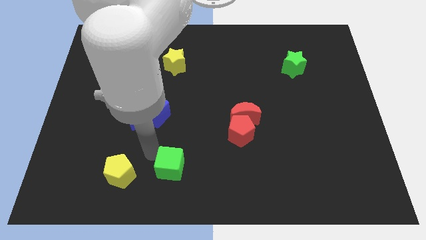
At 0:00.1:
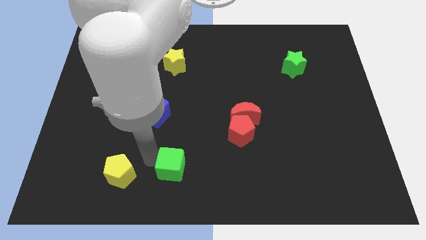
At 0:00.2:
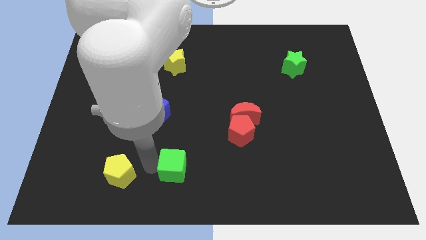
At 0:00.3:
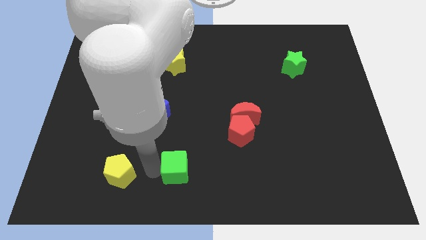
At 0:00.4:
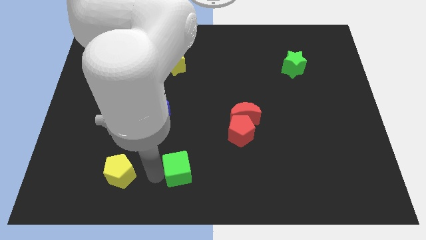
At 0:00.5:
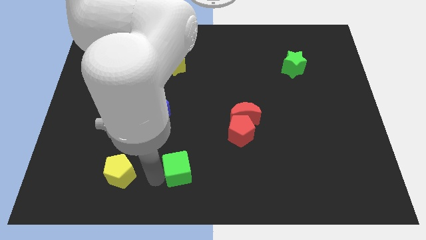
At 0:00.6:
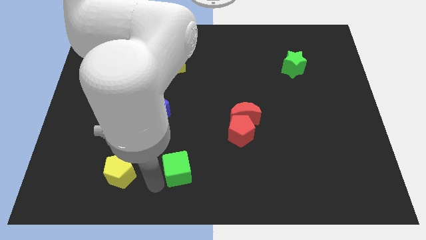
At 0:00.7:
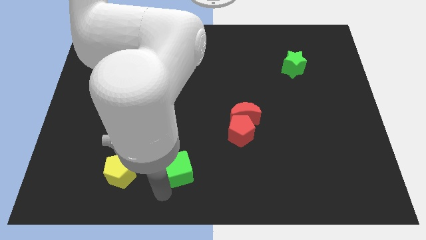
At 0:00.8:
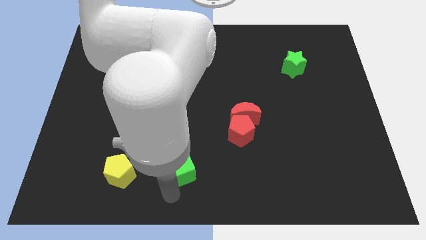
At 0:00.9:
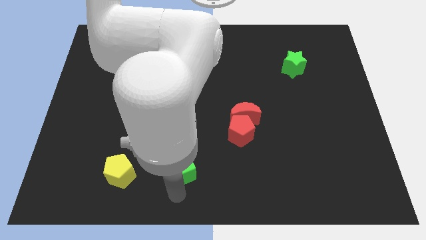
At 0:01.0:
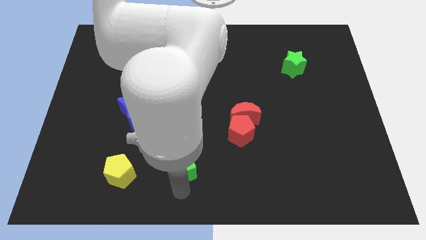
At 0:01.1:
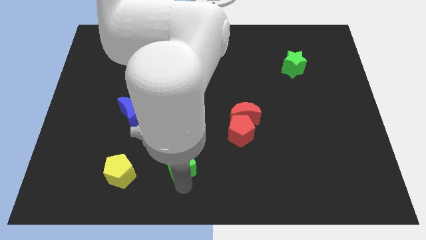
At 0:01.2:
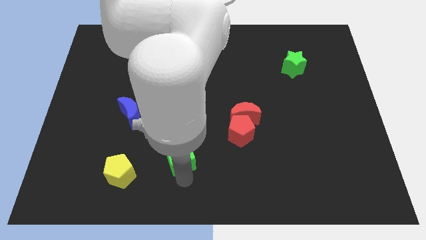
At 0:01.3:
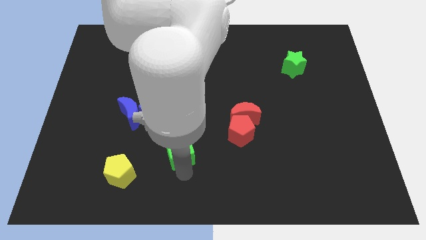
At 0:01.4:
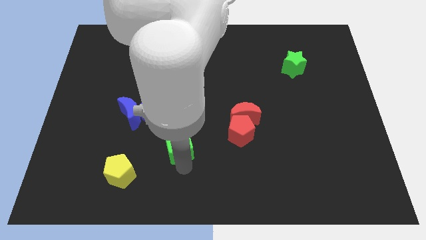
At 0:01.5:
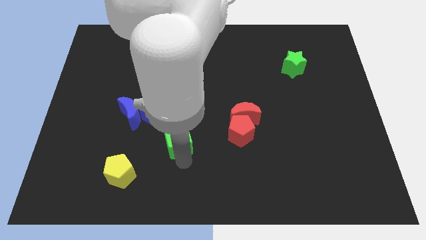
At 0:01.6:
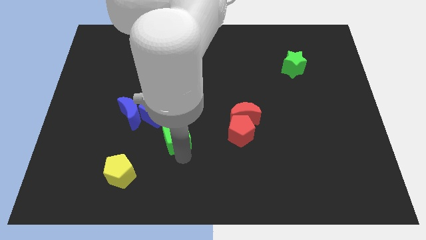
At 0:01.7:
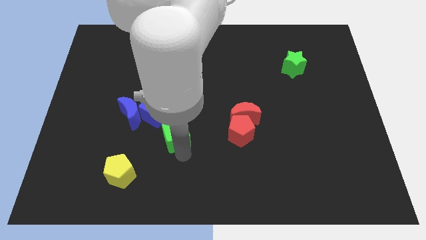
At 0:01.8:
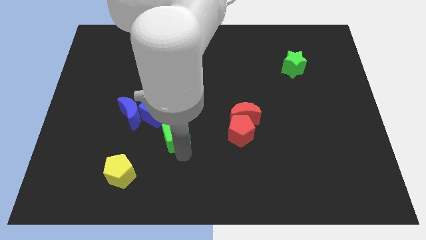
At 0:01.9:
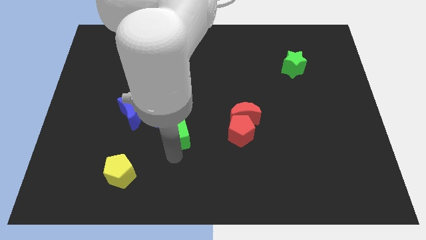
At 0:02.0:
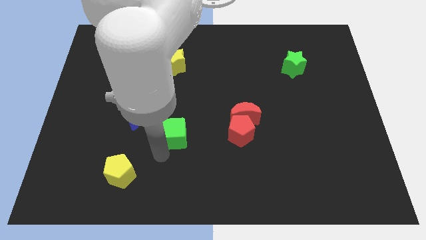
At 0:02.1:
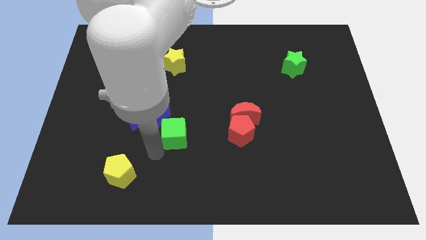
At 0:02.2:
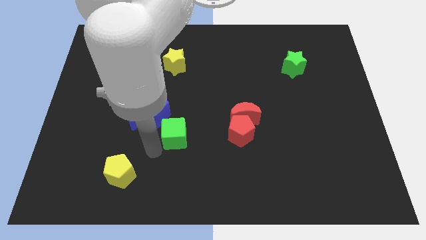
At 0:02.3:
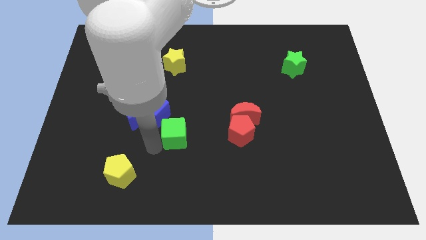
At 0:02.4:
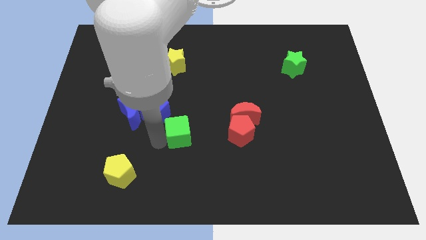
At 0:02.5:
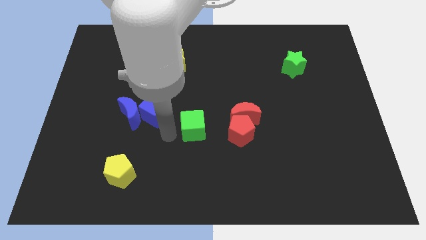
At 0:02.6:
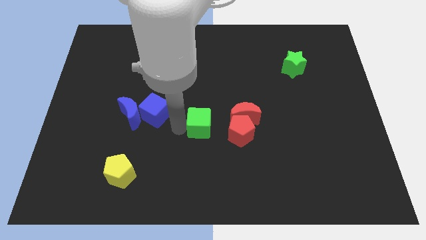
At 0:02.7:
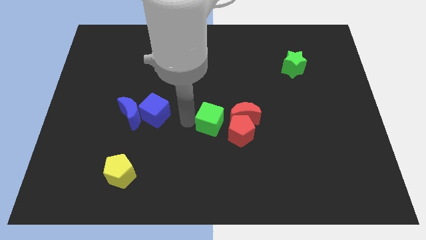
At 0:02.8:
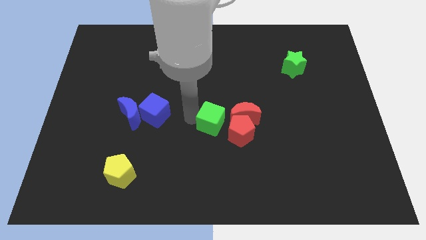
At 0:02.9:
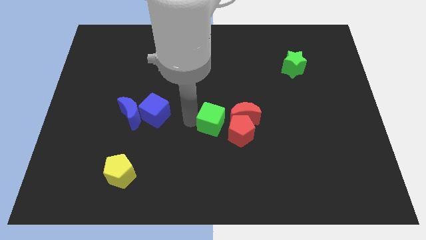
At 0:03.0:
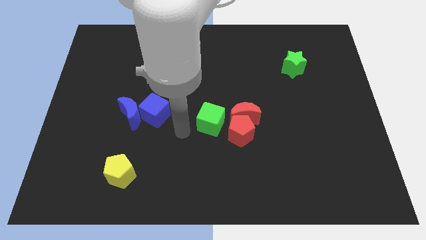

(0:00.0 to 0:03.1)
place the green cube to the left of red crescent

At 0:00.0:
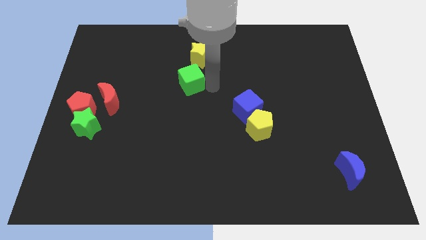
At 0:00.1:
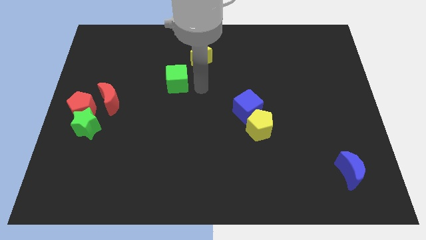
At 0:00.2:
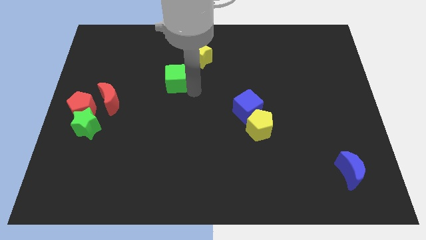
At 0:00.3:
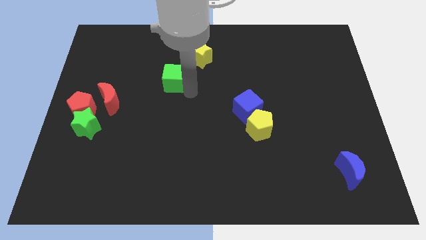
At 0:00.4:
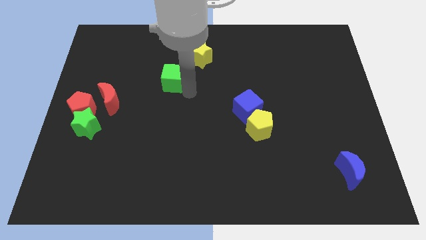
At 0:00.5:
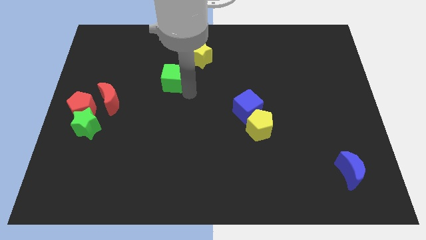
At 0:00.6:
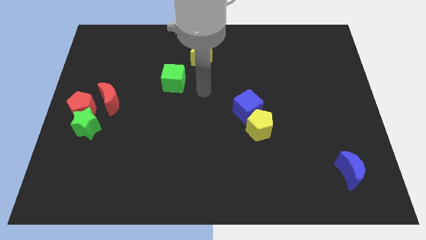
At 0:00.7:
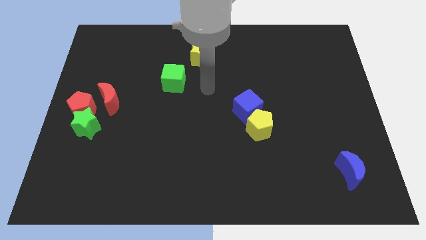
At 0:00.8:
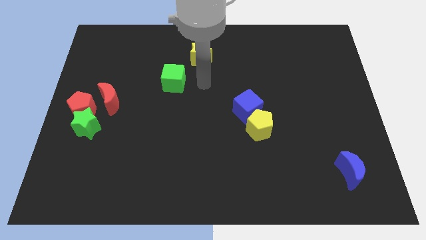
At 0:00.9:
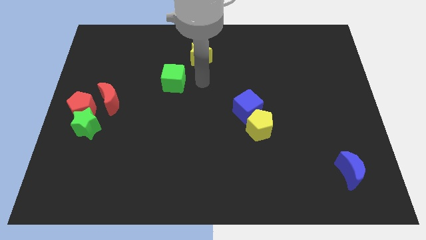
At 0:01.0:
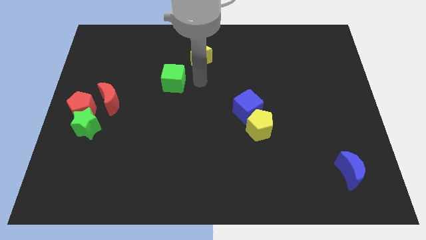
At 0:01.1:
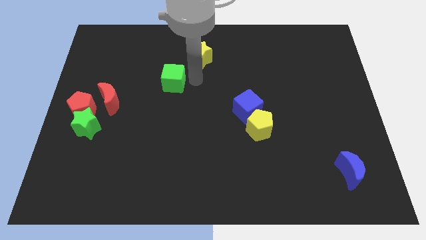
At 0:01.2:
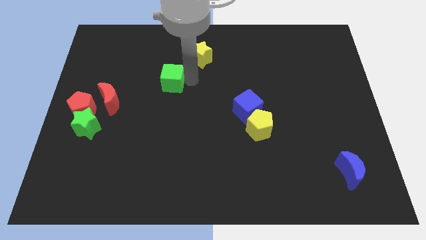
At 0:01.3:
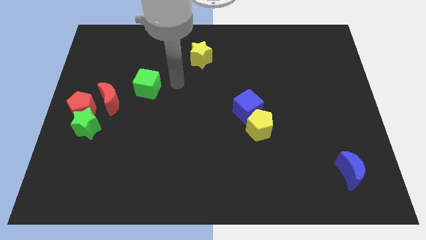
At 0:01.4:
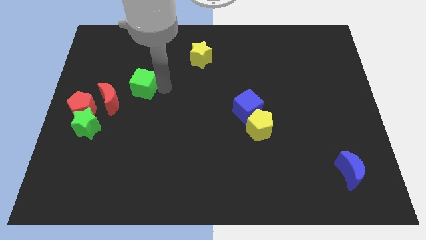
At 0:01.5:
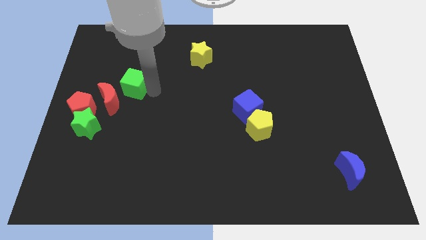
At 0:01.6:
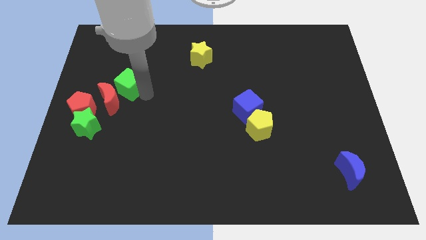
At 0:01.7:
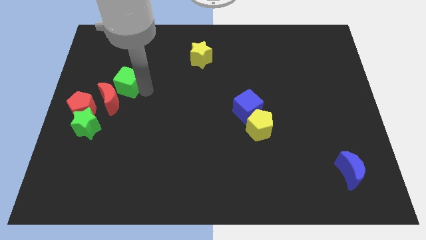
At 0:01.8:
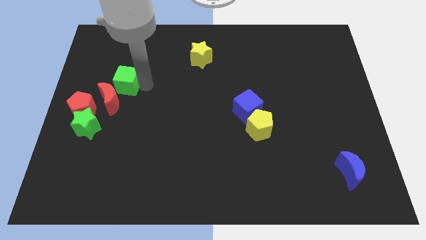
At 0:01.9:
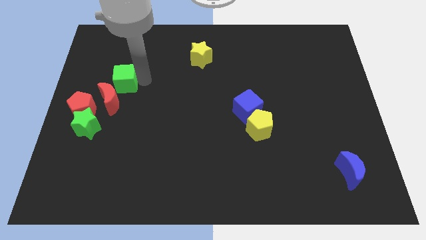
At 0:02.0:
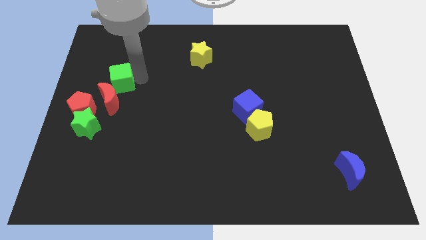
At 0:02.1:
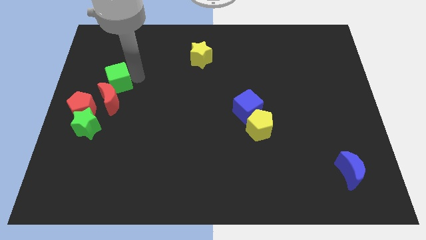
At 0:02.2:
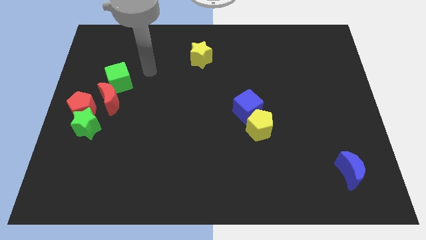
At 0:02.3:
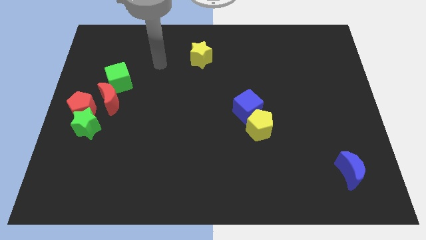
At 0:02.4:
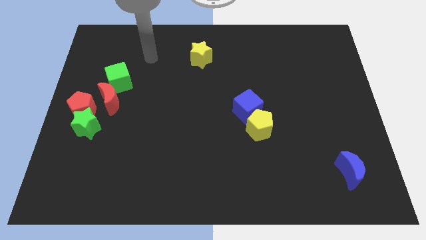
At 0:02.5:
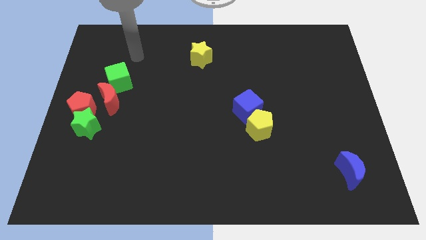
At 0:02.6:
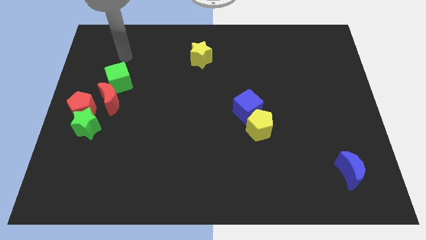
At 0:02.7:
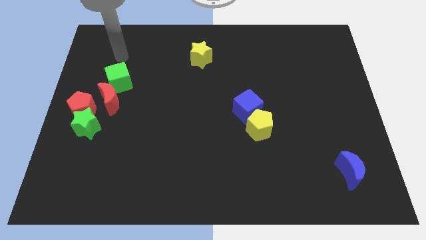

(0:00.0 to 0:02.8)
place green cube near to red crescent

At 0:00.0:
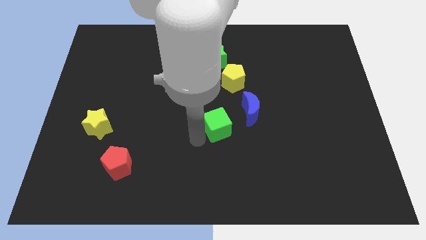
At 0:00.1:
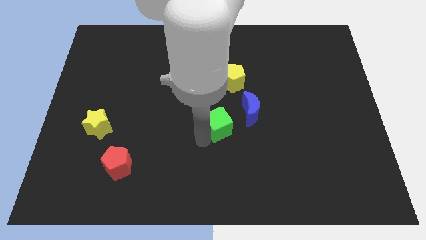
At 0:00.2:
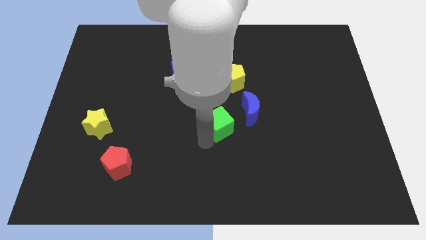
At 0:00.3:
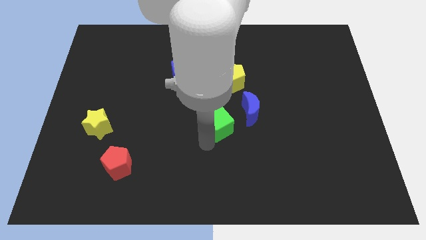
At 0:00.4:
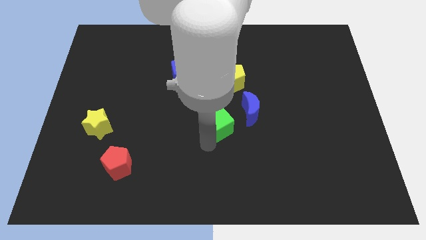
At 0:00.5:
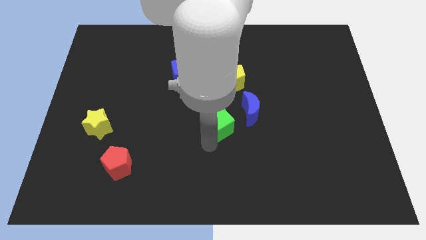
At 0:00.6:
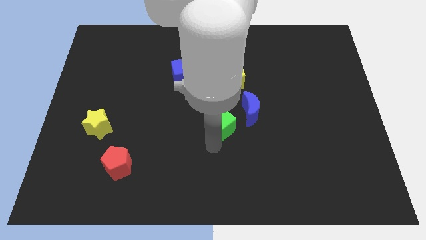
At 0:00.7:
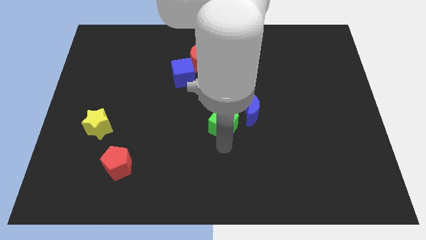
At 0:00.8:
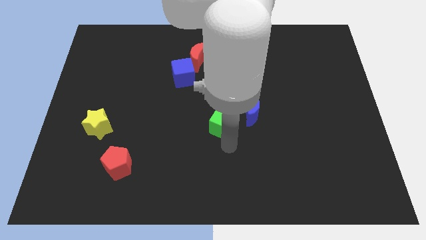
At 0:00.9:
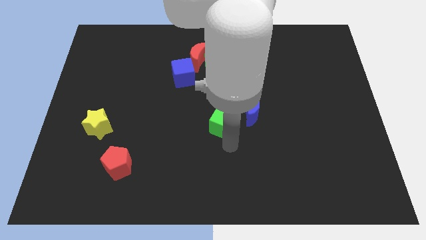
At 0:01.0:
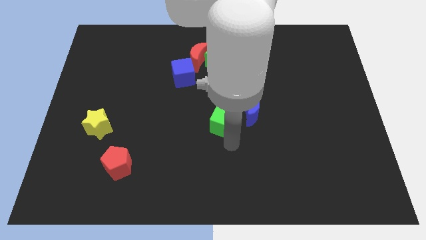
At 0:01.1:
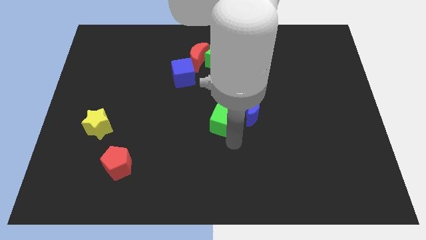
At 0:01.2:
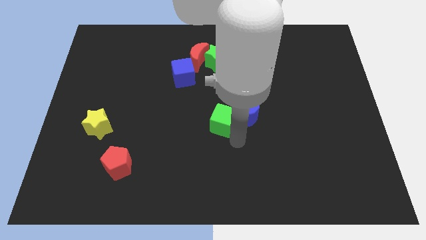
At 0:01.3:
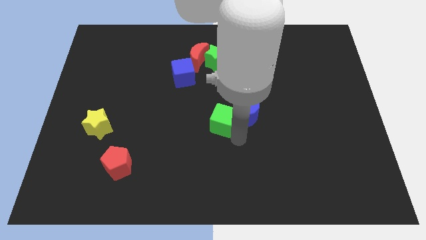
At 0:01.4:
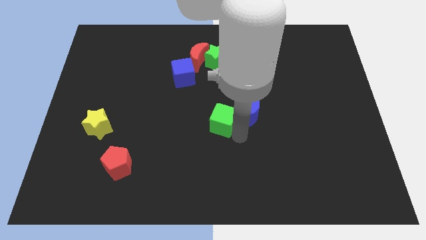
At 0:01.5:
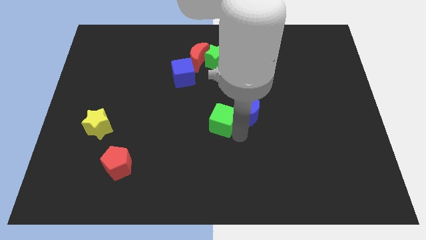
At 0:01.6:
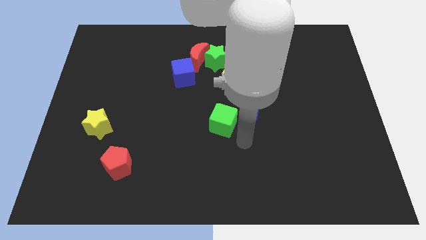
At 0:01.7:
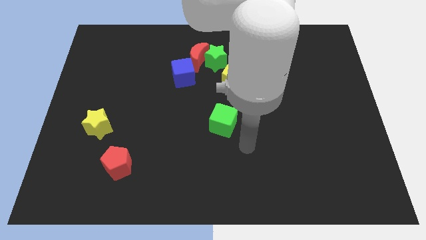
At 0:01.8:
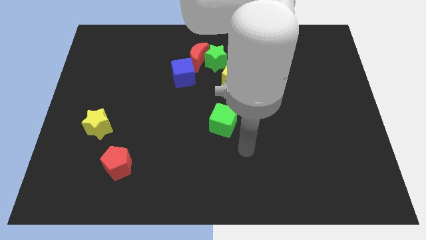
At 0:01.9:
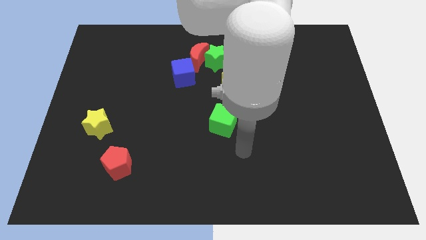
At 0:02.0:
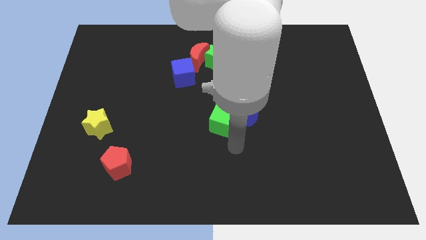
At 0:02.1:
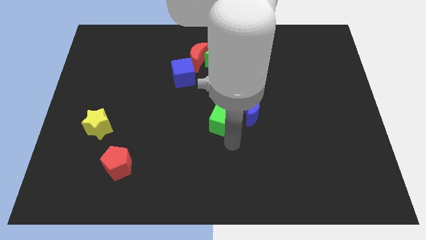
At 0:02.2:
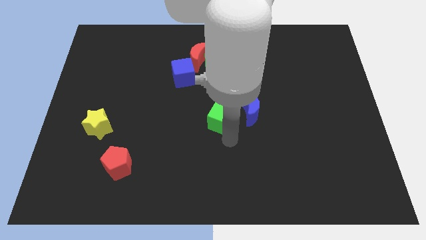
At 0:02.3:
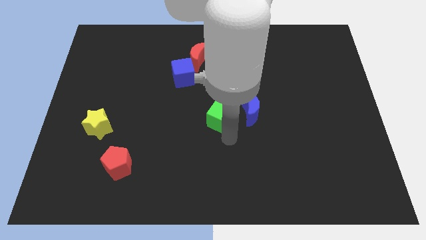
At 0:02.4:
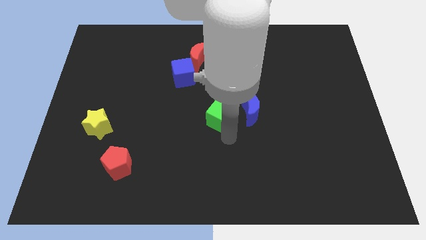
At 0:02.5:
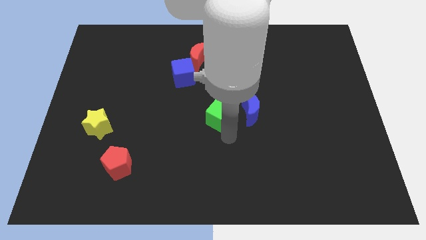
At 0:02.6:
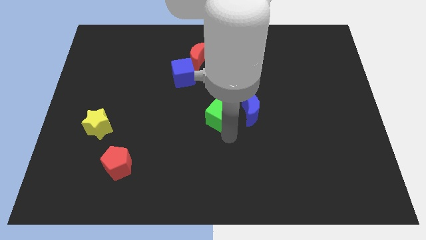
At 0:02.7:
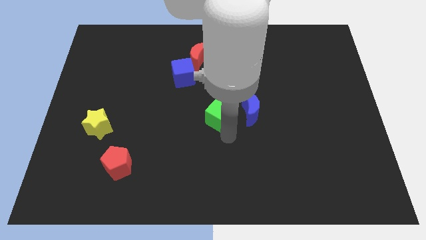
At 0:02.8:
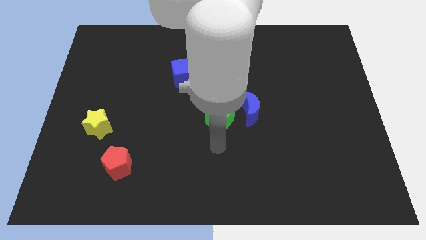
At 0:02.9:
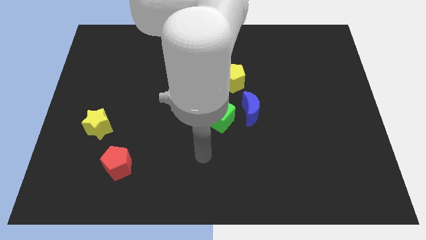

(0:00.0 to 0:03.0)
place the green cube left of blue crescent
